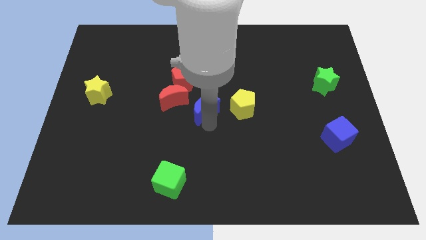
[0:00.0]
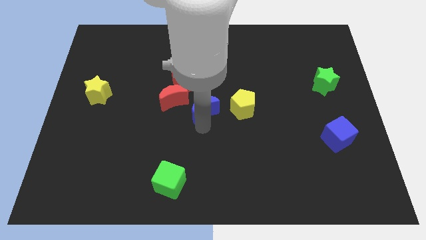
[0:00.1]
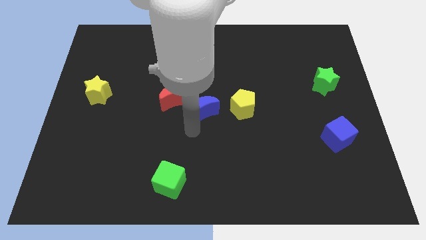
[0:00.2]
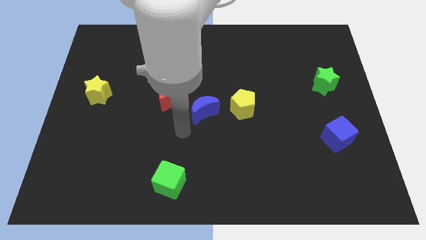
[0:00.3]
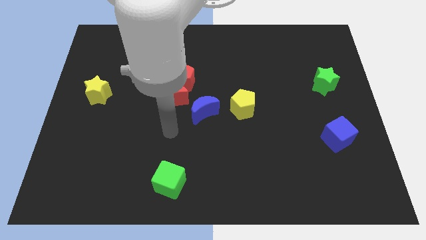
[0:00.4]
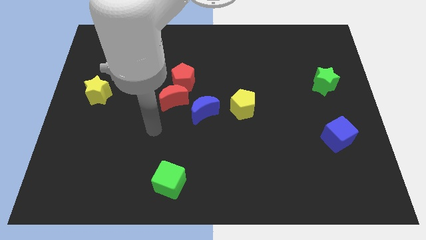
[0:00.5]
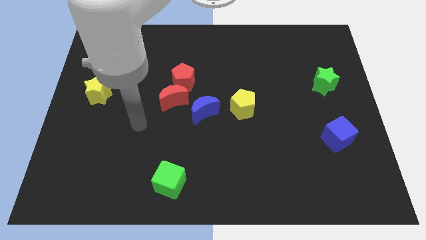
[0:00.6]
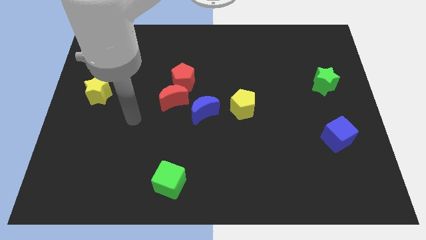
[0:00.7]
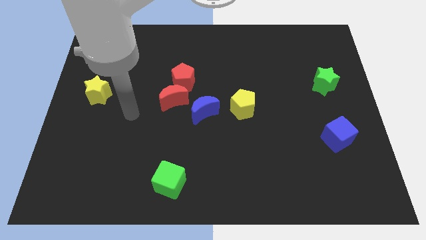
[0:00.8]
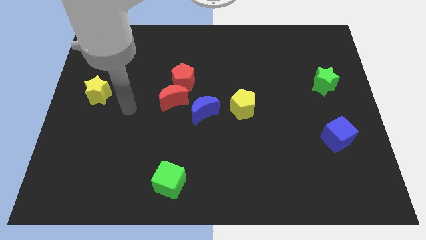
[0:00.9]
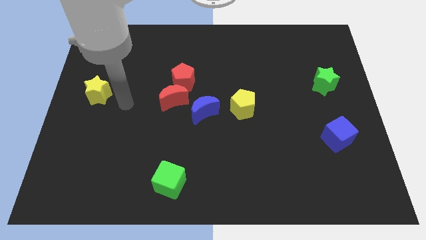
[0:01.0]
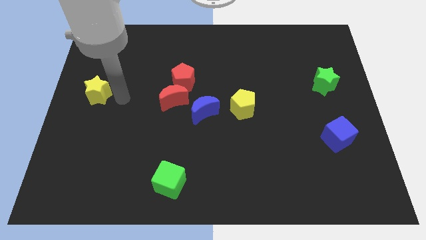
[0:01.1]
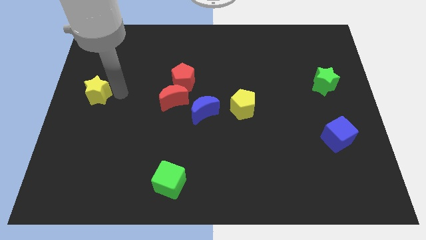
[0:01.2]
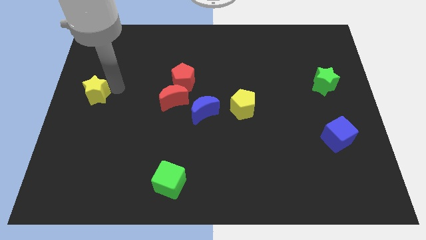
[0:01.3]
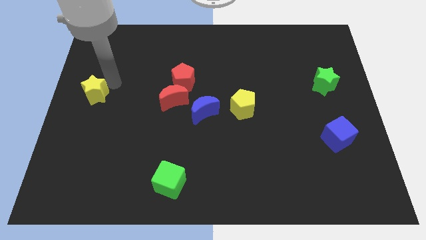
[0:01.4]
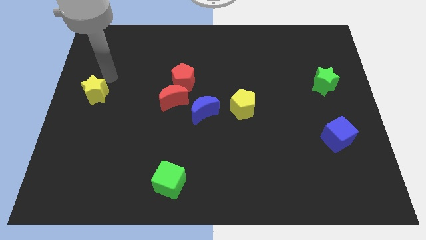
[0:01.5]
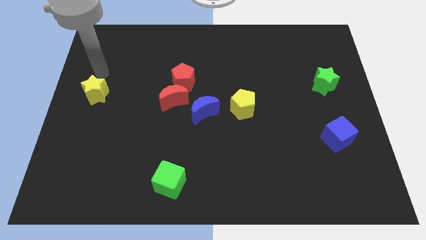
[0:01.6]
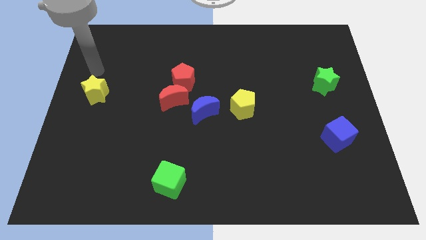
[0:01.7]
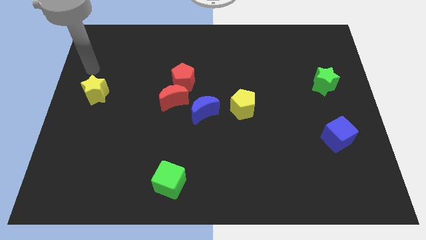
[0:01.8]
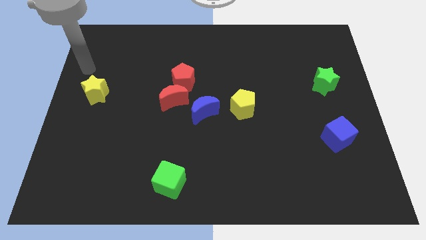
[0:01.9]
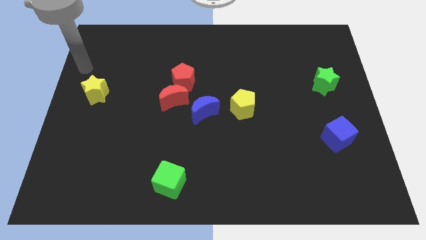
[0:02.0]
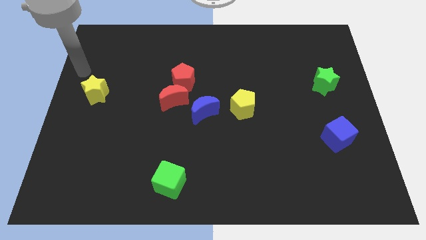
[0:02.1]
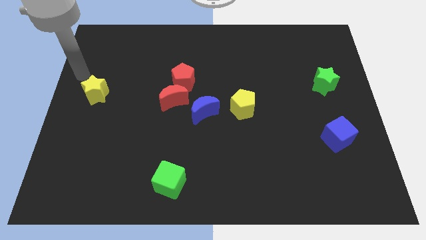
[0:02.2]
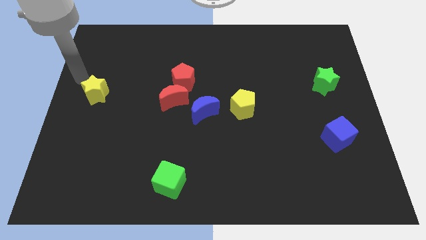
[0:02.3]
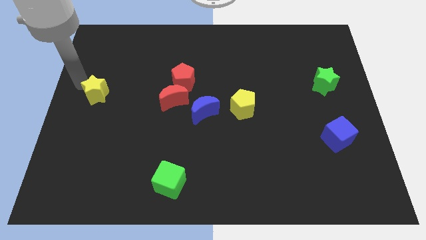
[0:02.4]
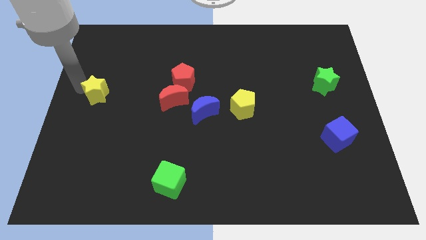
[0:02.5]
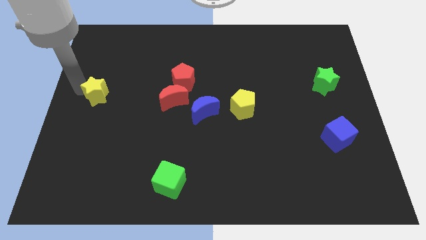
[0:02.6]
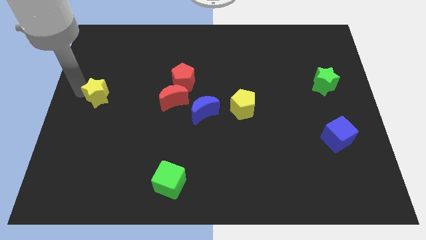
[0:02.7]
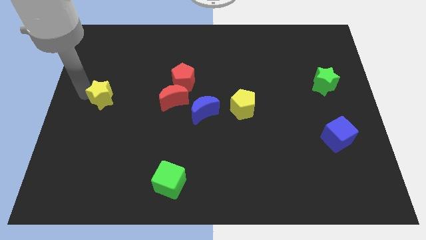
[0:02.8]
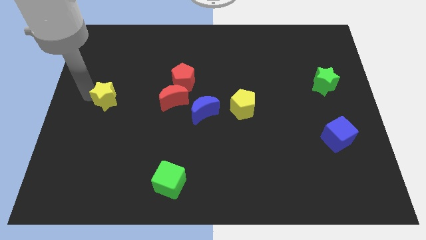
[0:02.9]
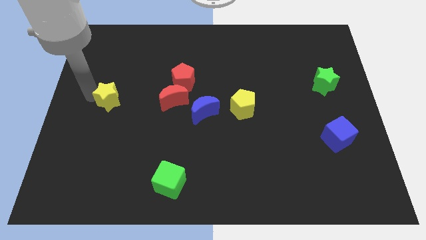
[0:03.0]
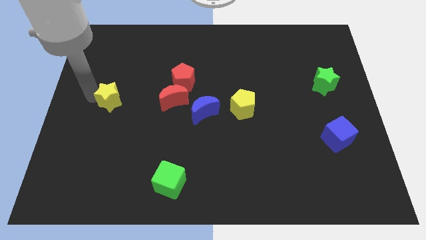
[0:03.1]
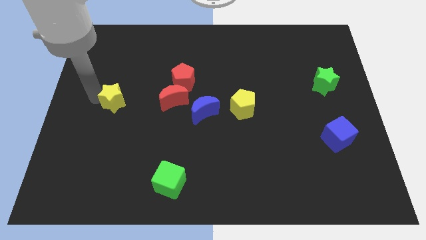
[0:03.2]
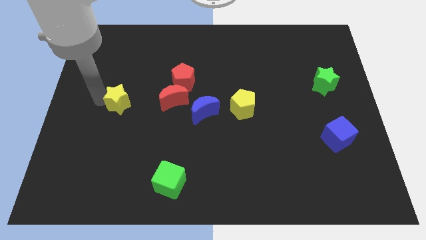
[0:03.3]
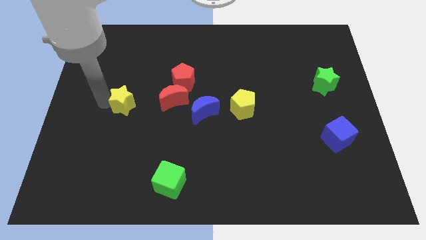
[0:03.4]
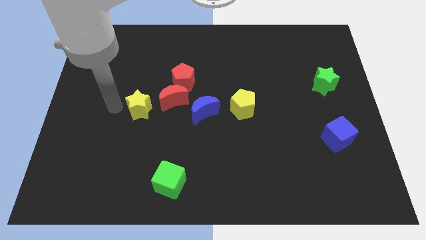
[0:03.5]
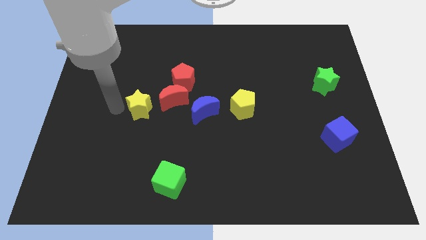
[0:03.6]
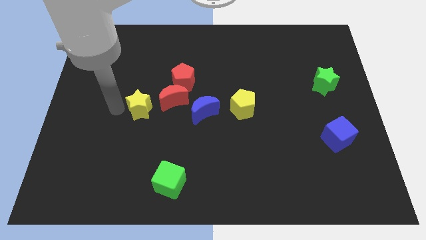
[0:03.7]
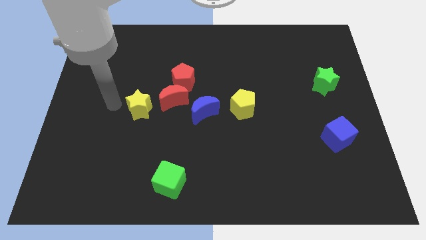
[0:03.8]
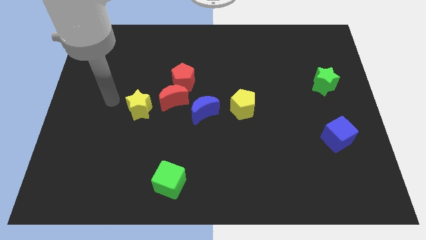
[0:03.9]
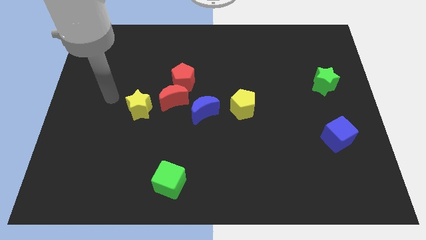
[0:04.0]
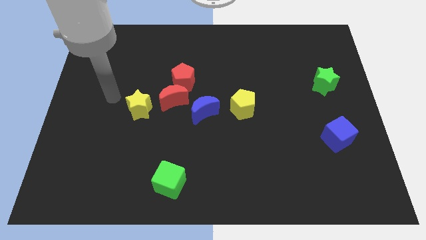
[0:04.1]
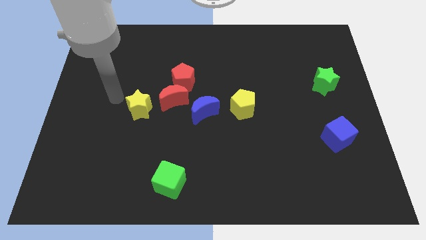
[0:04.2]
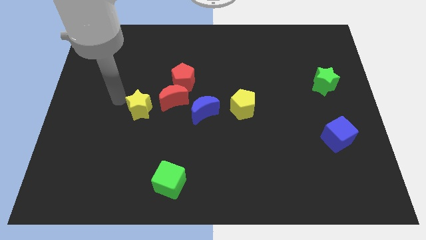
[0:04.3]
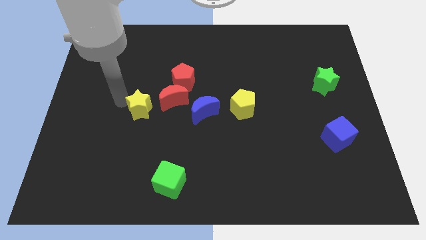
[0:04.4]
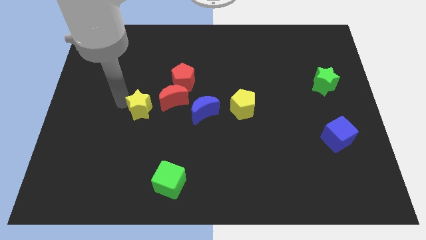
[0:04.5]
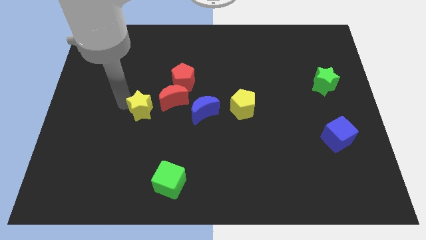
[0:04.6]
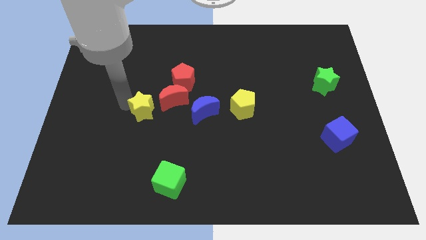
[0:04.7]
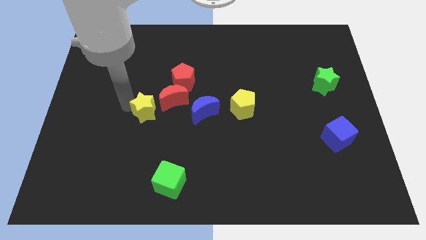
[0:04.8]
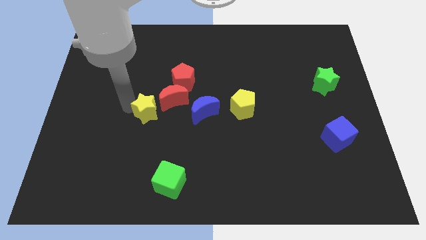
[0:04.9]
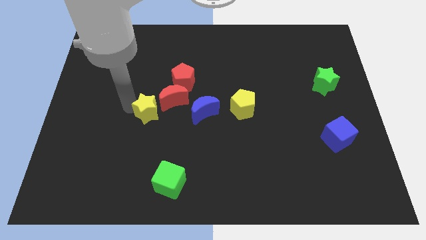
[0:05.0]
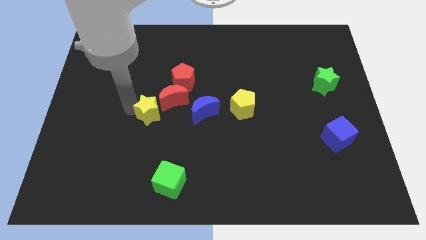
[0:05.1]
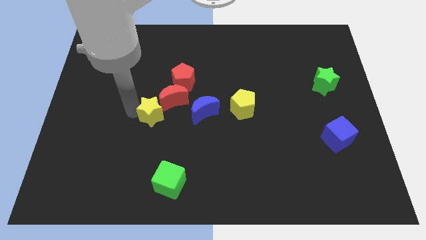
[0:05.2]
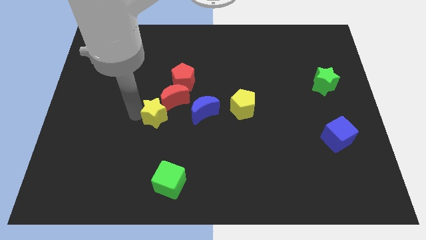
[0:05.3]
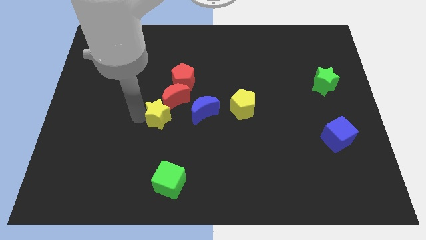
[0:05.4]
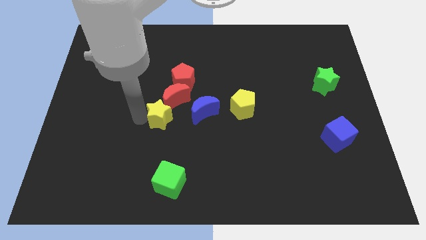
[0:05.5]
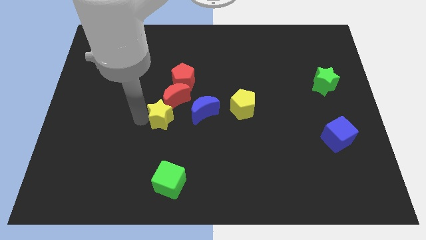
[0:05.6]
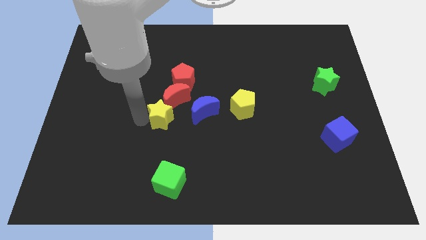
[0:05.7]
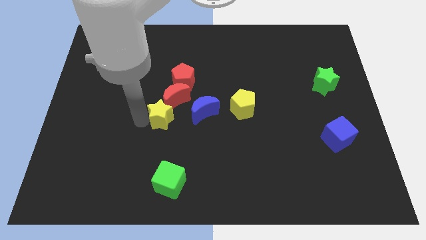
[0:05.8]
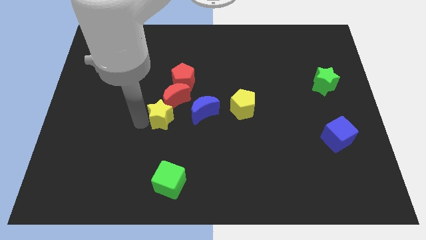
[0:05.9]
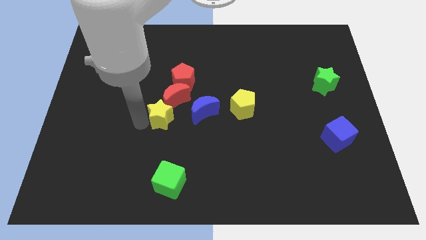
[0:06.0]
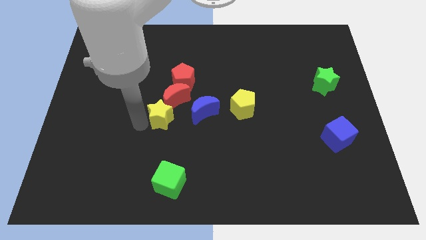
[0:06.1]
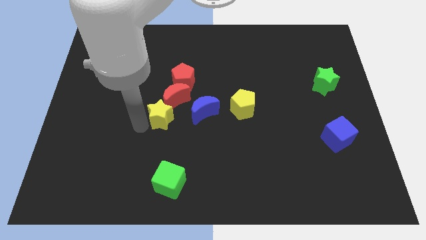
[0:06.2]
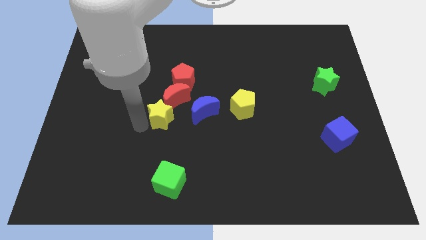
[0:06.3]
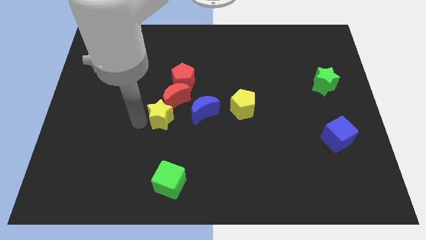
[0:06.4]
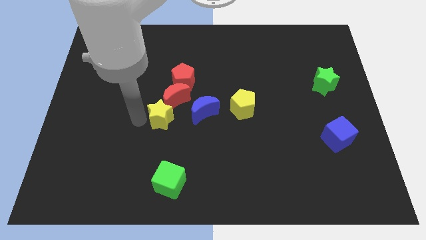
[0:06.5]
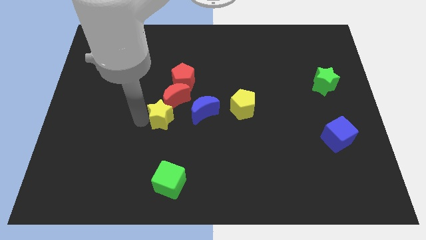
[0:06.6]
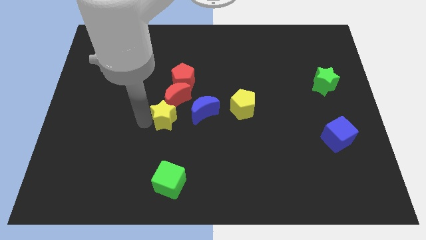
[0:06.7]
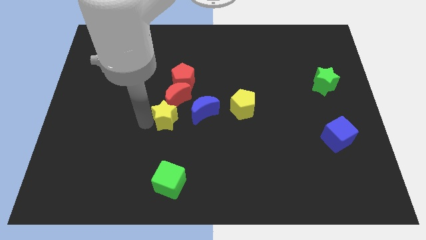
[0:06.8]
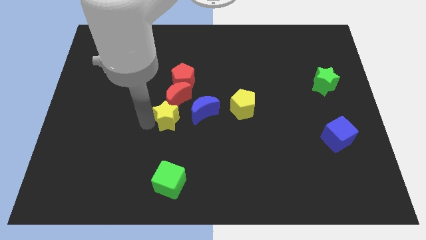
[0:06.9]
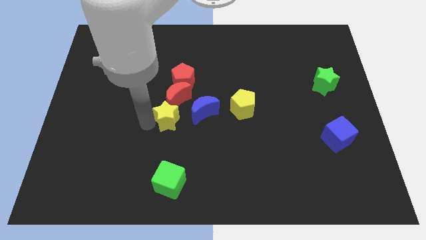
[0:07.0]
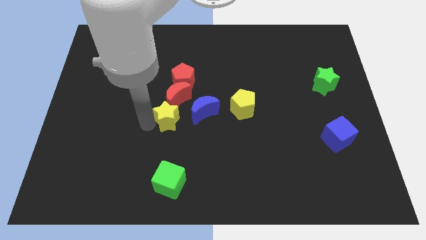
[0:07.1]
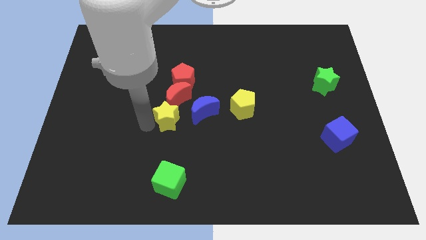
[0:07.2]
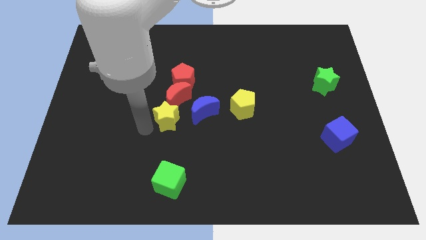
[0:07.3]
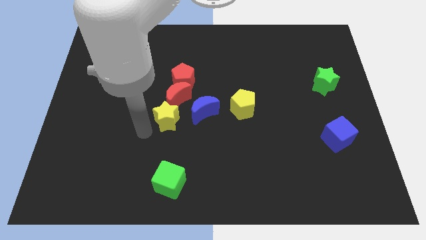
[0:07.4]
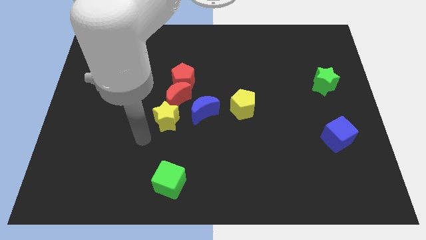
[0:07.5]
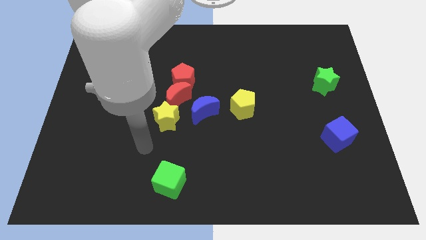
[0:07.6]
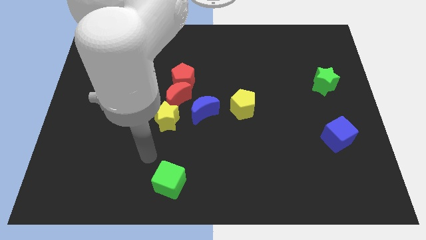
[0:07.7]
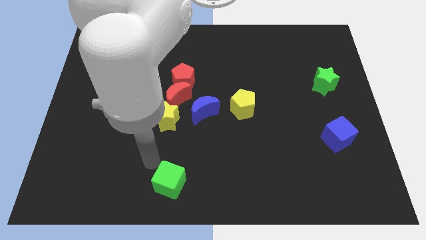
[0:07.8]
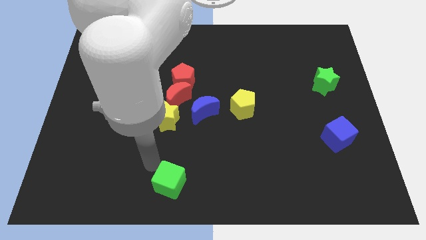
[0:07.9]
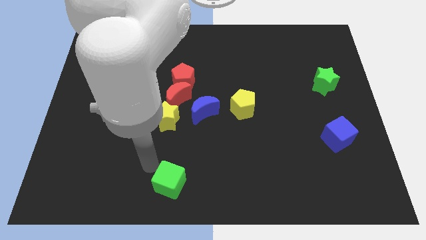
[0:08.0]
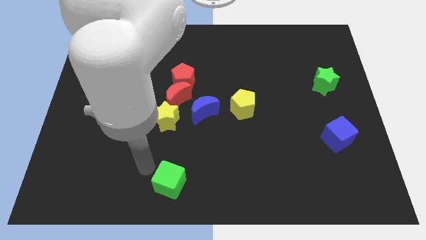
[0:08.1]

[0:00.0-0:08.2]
move the yellow star at the top right side of the green cube

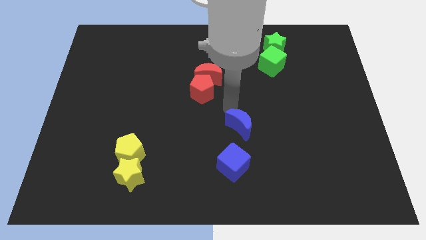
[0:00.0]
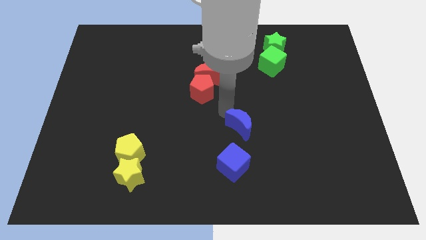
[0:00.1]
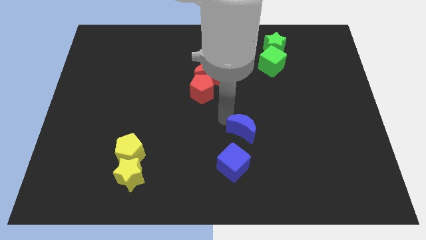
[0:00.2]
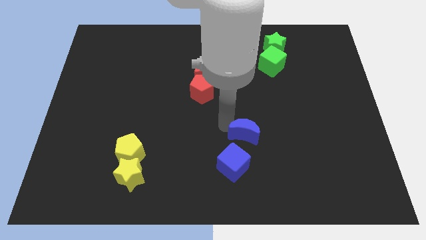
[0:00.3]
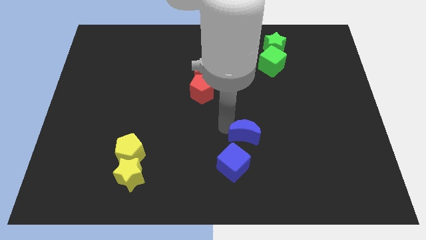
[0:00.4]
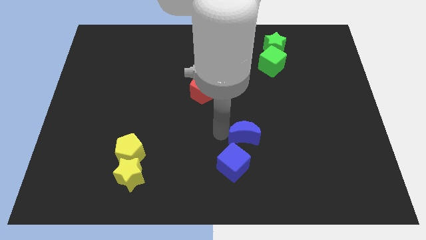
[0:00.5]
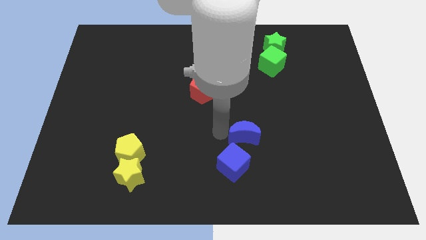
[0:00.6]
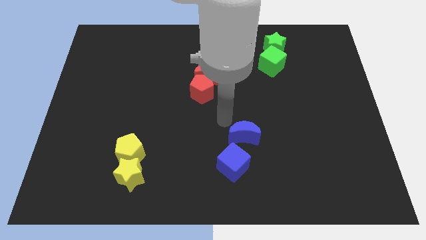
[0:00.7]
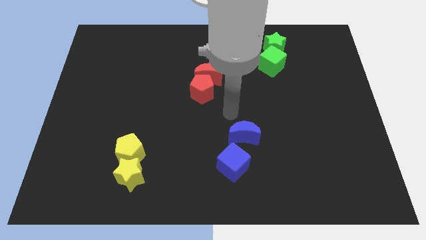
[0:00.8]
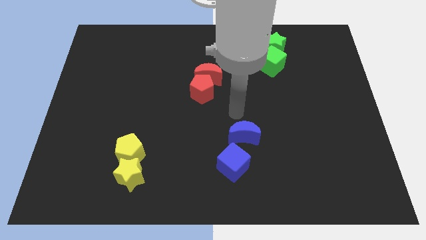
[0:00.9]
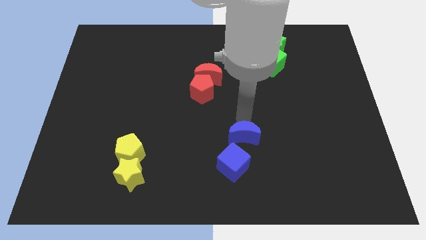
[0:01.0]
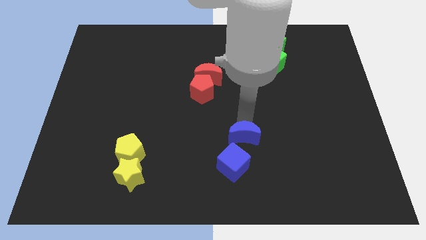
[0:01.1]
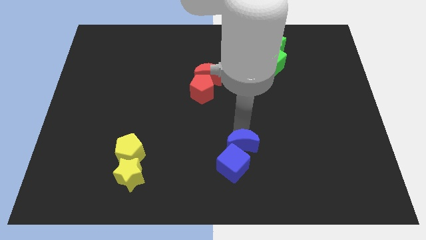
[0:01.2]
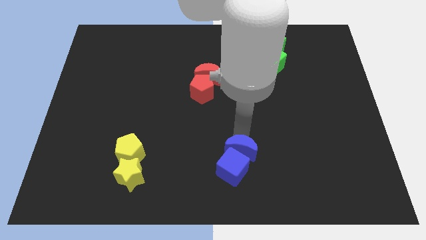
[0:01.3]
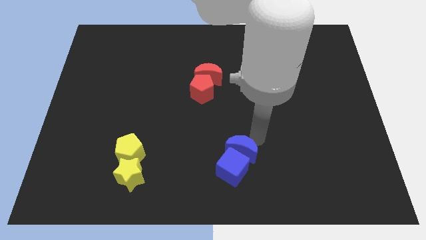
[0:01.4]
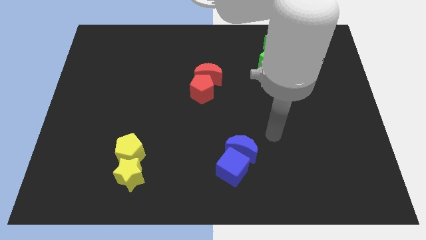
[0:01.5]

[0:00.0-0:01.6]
move blue crescent into blue cube
